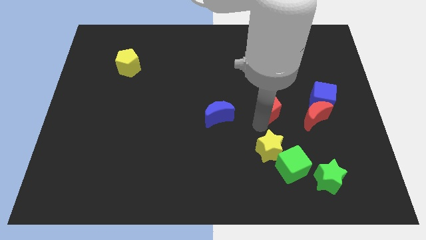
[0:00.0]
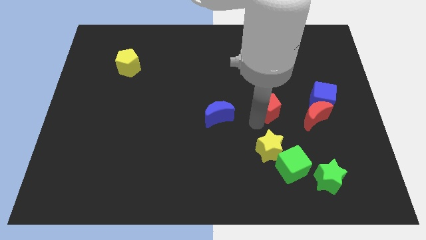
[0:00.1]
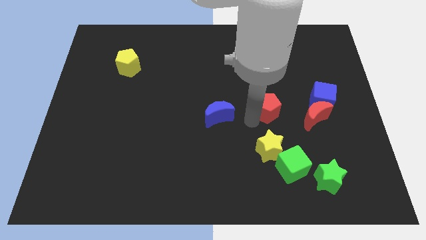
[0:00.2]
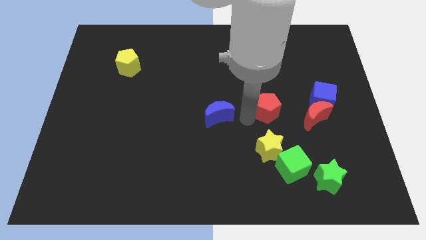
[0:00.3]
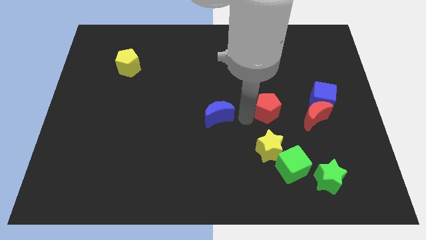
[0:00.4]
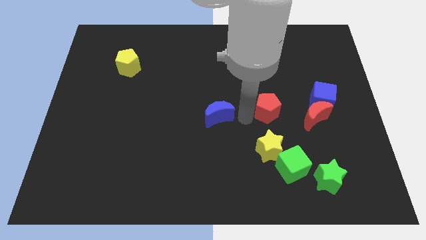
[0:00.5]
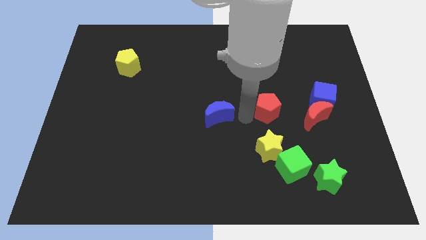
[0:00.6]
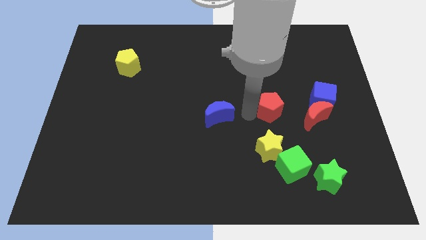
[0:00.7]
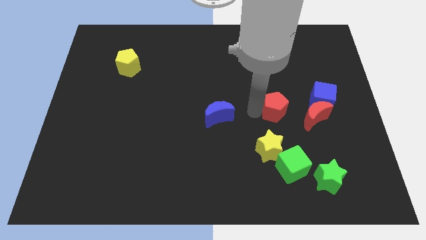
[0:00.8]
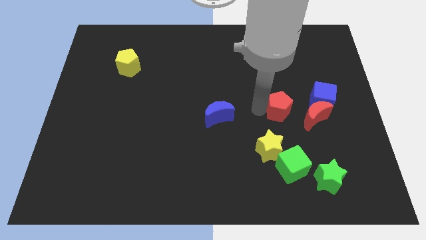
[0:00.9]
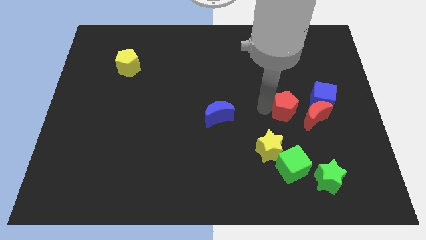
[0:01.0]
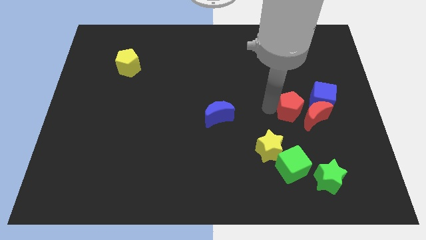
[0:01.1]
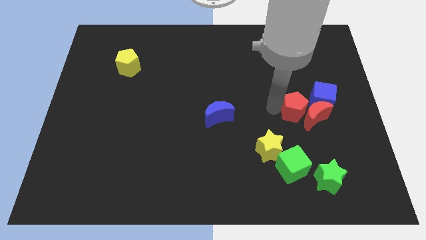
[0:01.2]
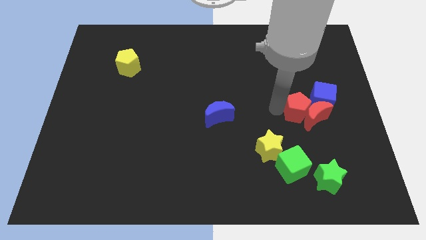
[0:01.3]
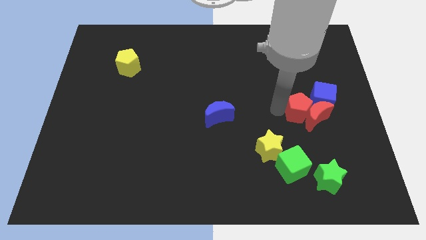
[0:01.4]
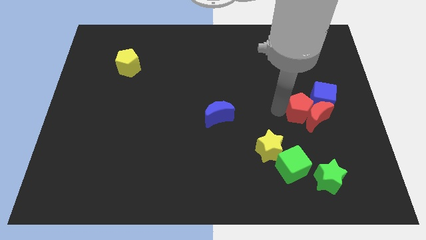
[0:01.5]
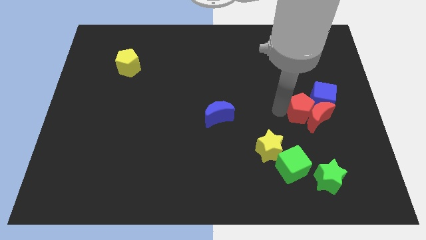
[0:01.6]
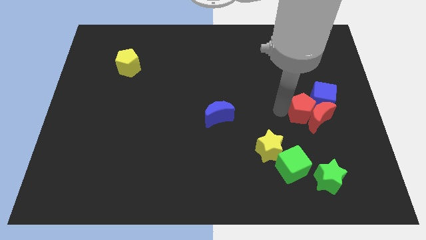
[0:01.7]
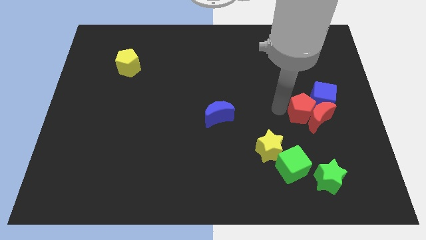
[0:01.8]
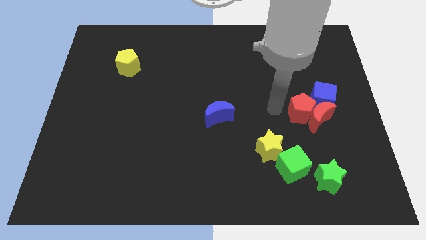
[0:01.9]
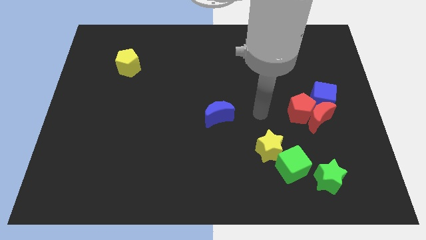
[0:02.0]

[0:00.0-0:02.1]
add red pentagon to the left of red moon

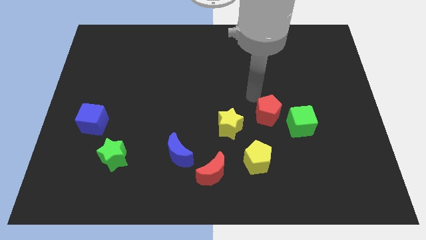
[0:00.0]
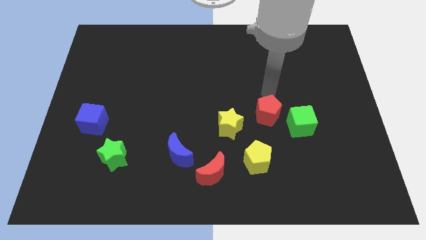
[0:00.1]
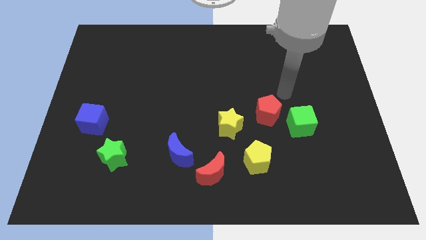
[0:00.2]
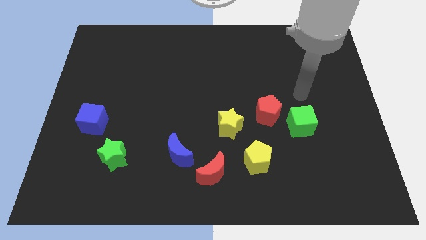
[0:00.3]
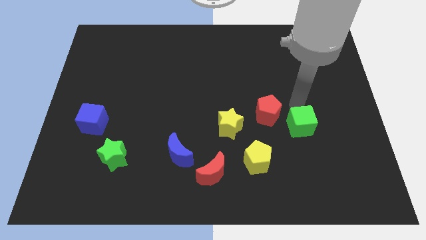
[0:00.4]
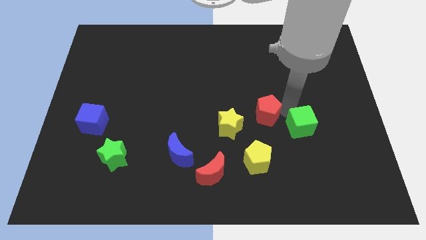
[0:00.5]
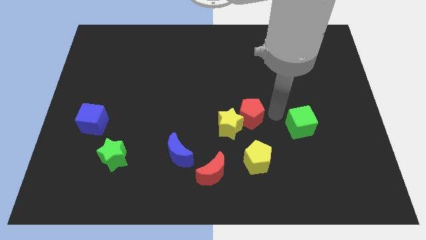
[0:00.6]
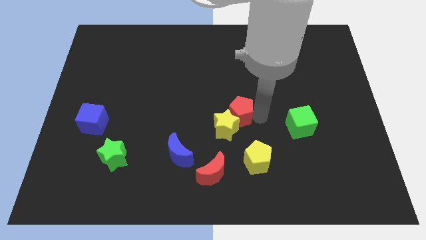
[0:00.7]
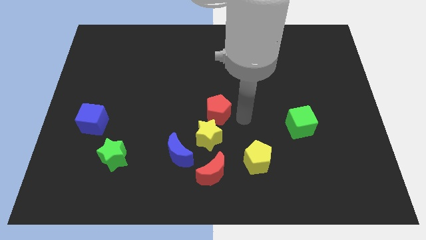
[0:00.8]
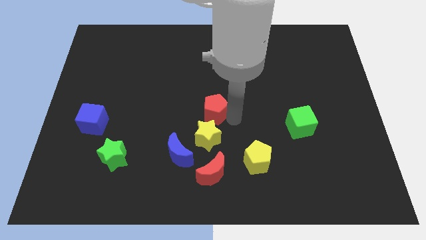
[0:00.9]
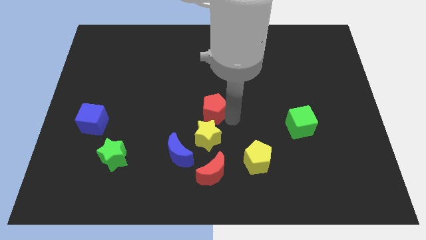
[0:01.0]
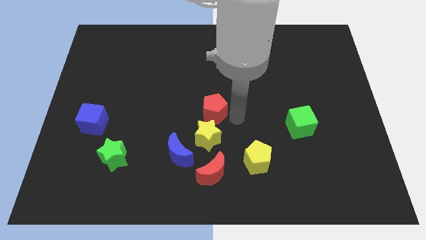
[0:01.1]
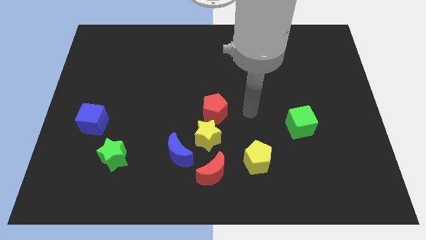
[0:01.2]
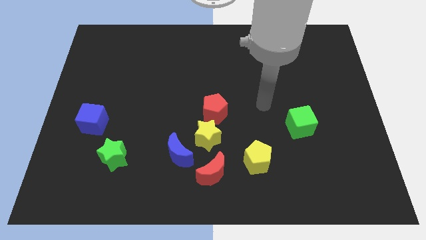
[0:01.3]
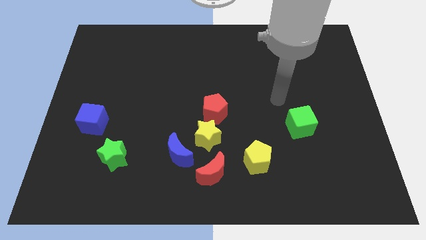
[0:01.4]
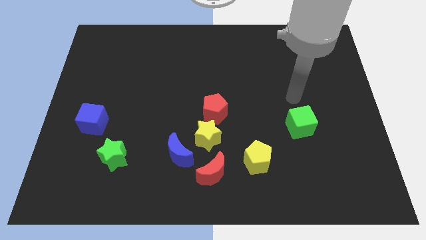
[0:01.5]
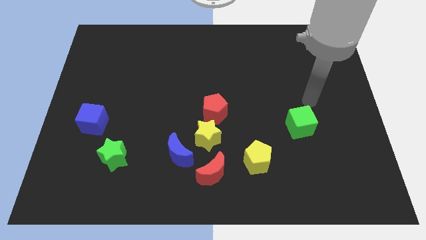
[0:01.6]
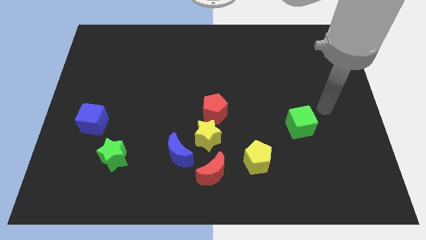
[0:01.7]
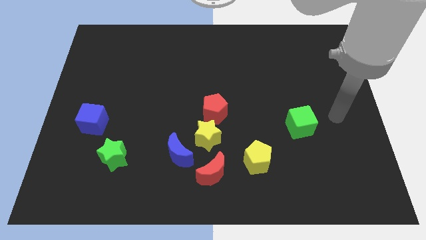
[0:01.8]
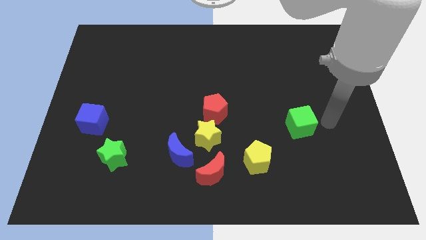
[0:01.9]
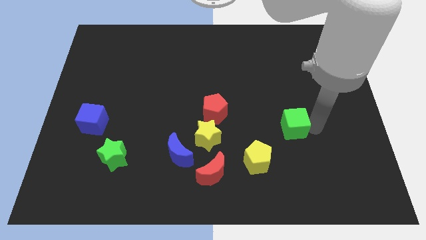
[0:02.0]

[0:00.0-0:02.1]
move the red pentagon above the yellow star

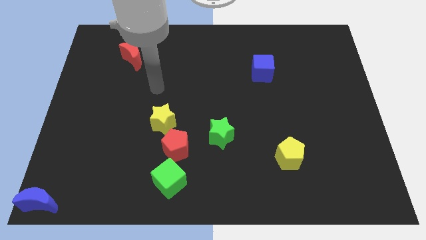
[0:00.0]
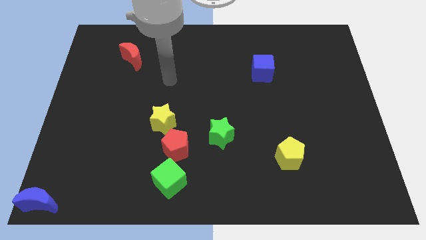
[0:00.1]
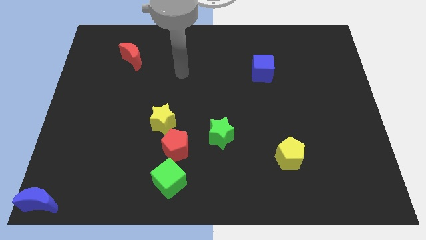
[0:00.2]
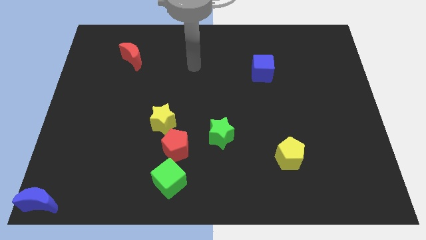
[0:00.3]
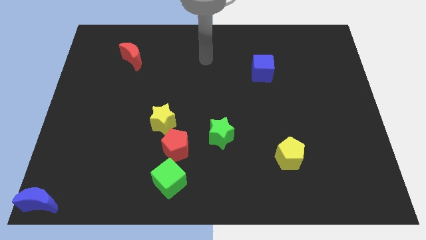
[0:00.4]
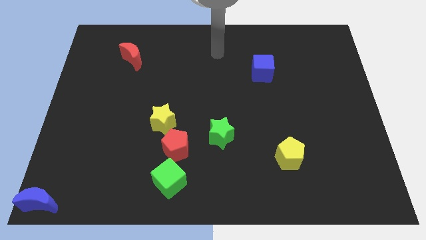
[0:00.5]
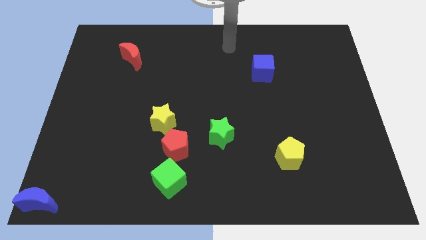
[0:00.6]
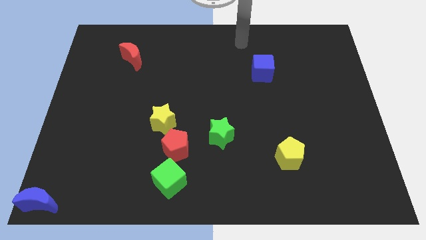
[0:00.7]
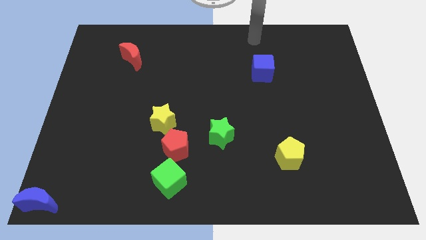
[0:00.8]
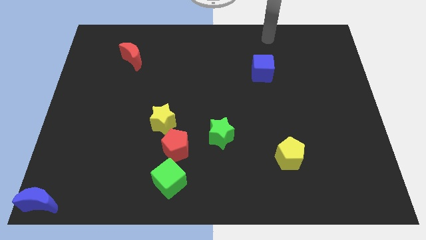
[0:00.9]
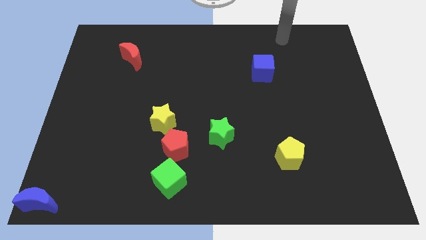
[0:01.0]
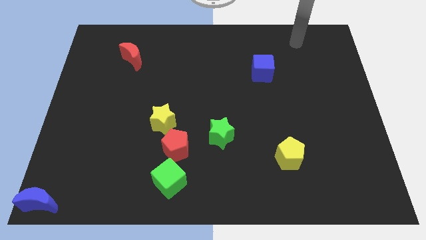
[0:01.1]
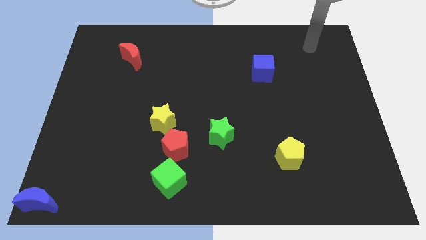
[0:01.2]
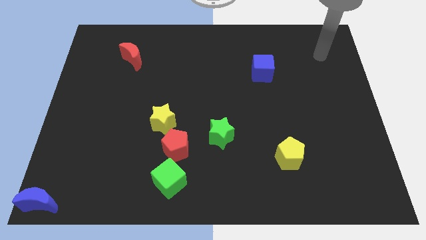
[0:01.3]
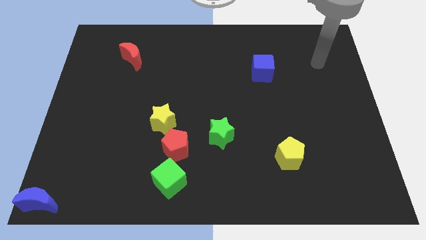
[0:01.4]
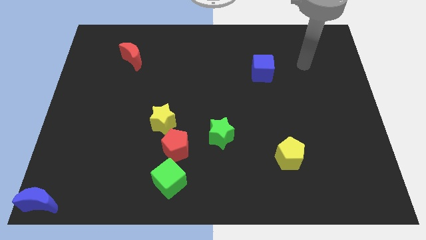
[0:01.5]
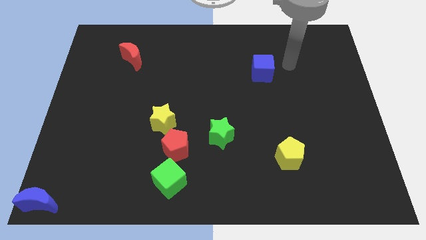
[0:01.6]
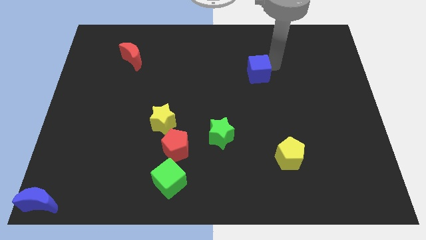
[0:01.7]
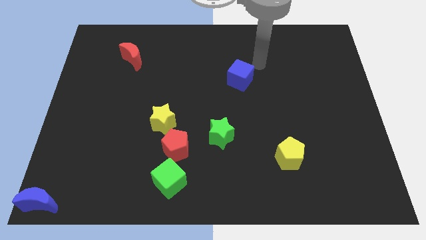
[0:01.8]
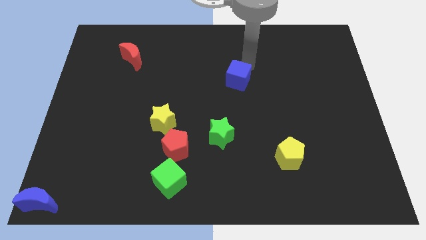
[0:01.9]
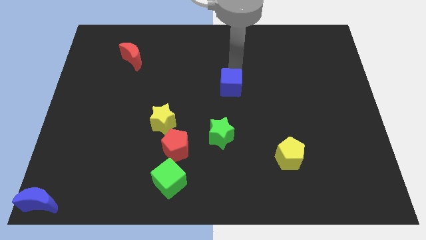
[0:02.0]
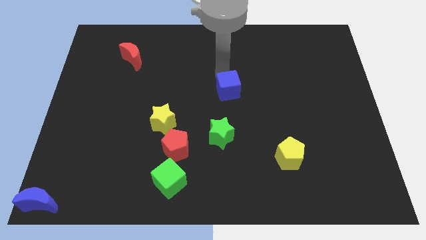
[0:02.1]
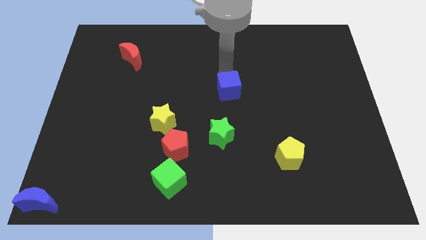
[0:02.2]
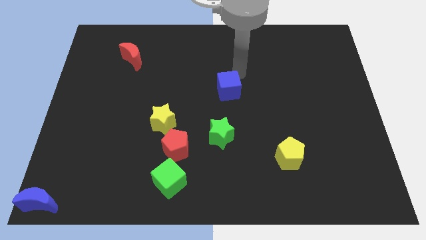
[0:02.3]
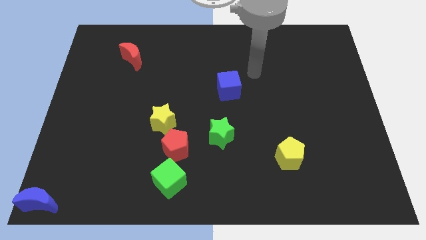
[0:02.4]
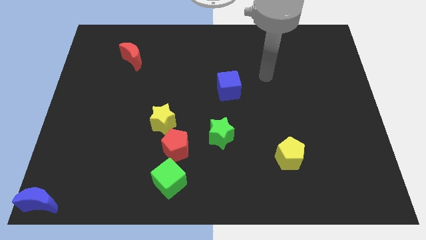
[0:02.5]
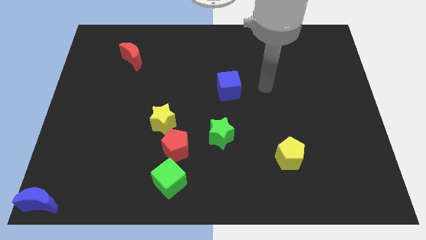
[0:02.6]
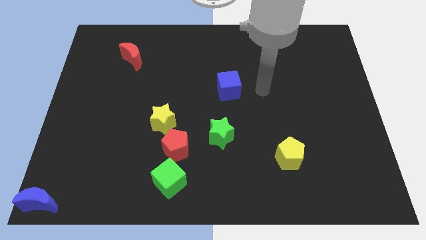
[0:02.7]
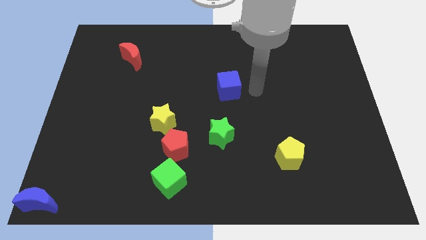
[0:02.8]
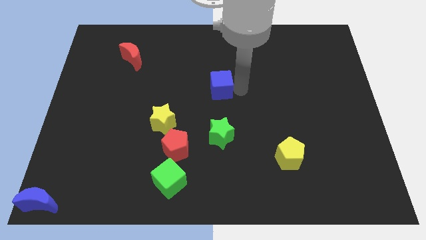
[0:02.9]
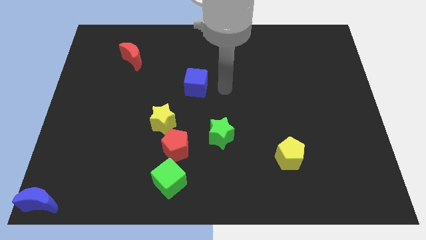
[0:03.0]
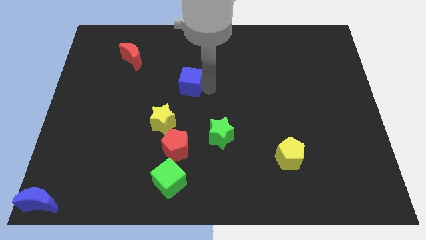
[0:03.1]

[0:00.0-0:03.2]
place blue cube above green star

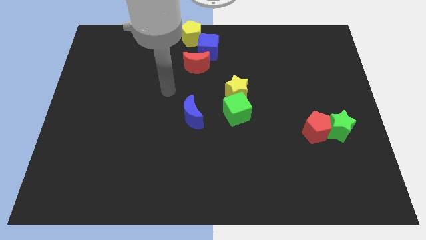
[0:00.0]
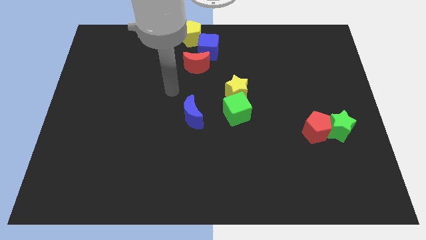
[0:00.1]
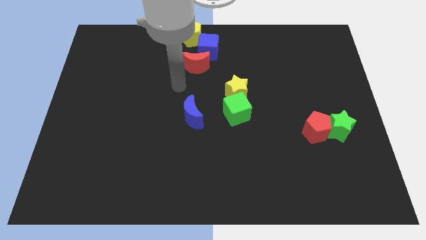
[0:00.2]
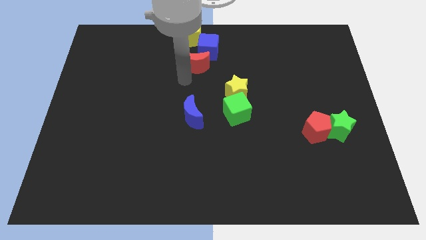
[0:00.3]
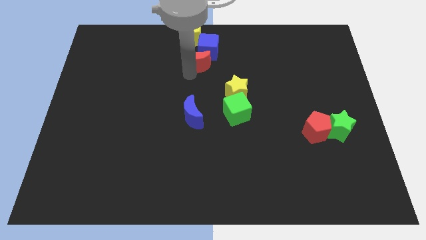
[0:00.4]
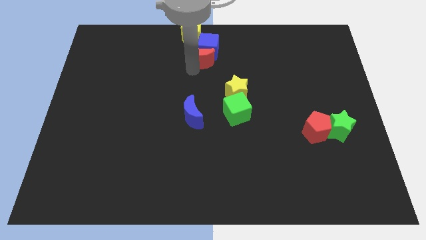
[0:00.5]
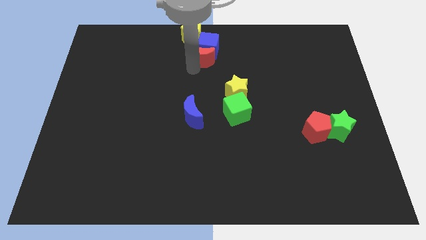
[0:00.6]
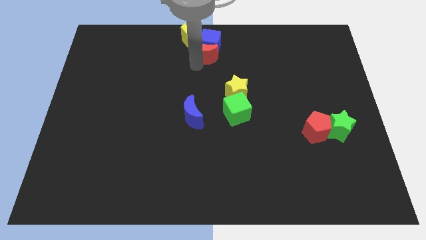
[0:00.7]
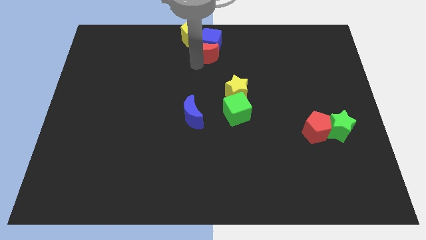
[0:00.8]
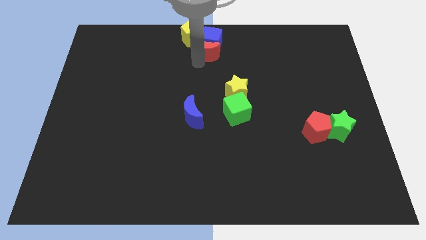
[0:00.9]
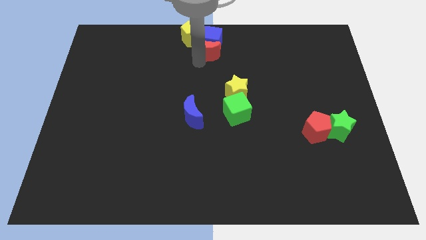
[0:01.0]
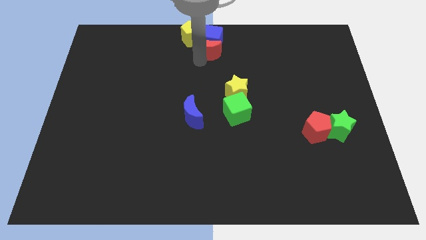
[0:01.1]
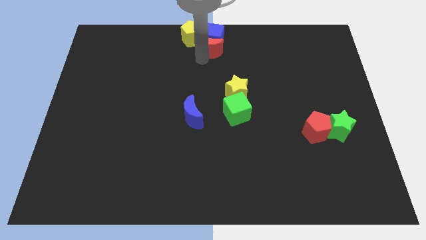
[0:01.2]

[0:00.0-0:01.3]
push the red moon into the blue cube

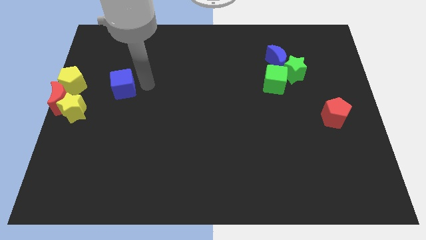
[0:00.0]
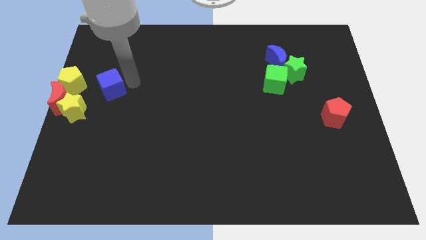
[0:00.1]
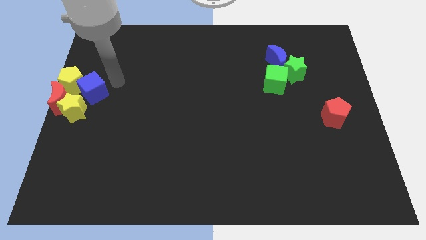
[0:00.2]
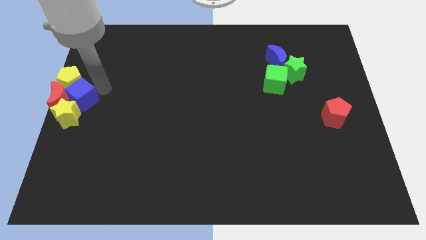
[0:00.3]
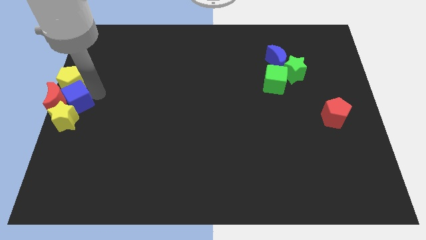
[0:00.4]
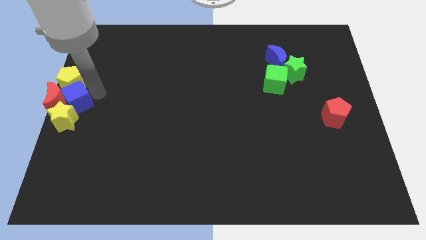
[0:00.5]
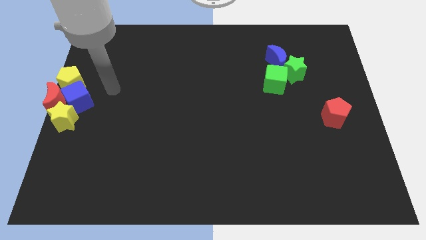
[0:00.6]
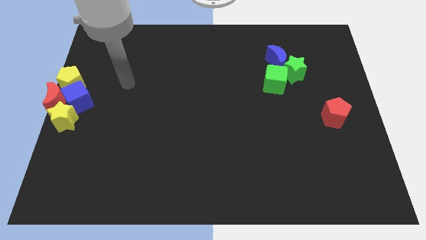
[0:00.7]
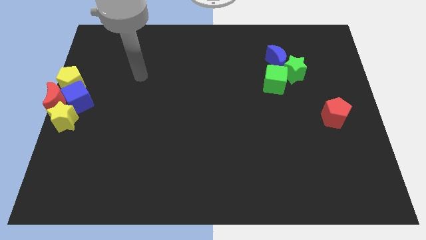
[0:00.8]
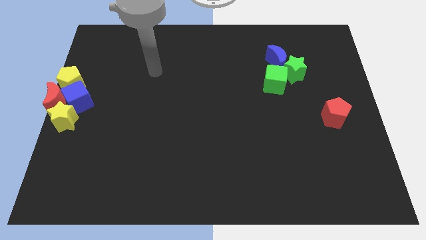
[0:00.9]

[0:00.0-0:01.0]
place blue cube in between two yellow blocks
